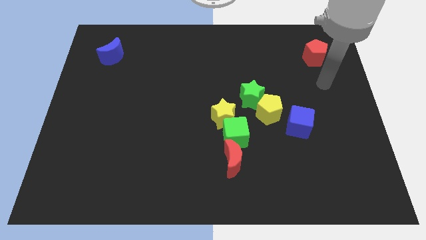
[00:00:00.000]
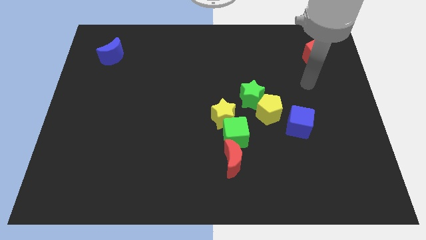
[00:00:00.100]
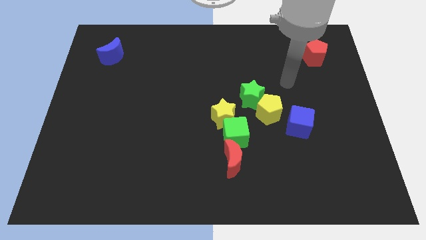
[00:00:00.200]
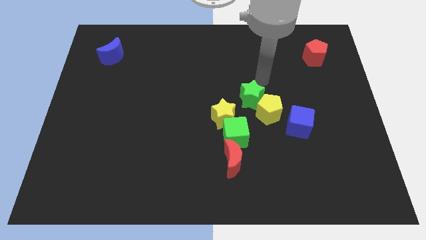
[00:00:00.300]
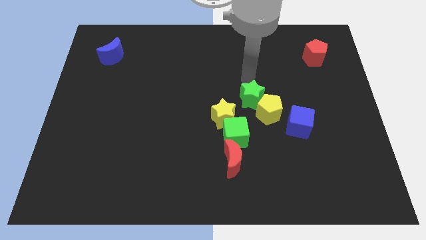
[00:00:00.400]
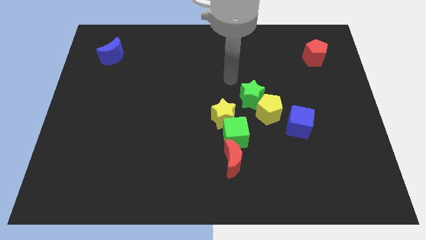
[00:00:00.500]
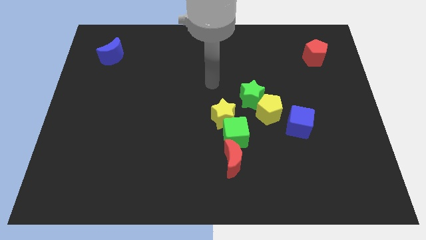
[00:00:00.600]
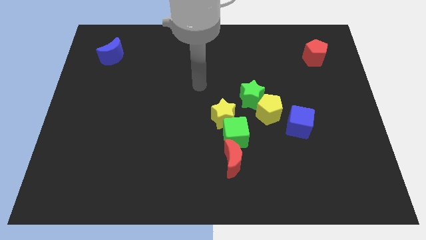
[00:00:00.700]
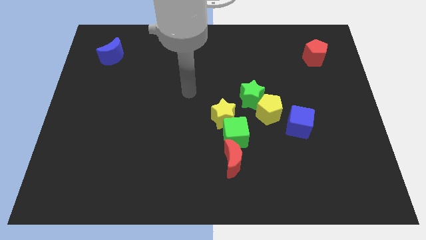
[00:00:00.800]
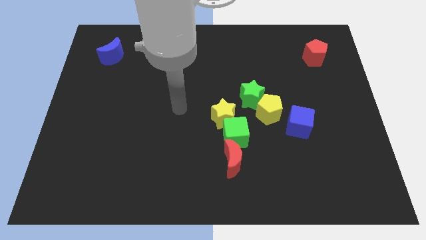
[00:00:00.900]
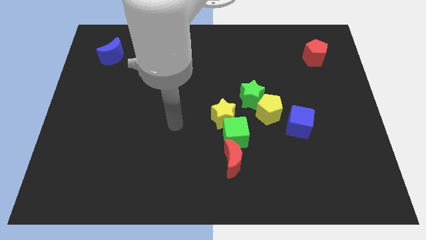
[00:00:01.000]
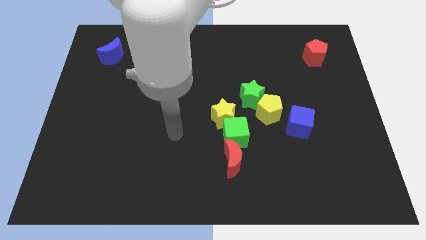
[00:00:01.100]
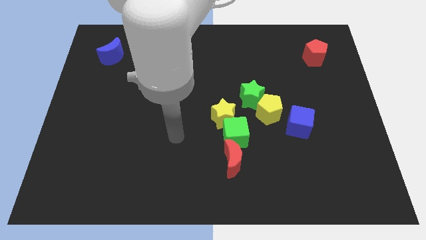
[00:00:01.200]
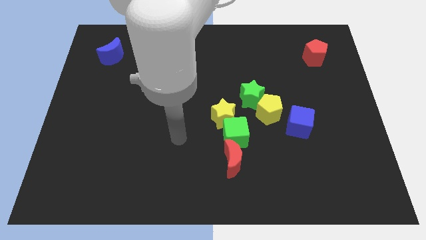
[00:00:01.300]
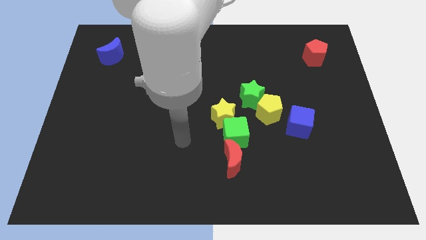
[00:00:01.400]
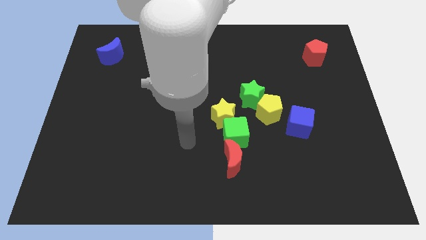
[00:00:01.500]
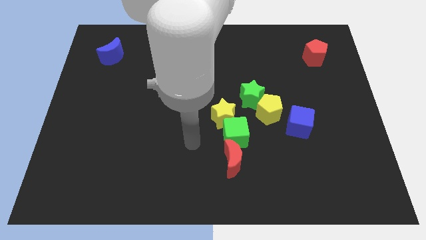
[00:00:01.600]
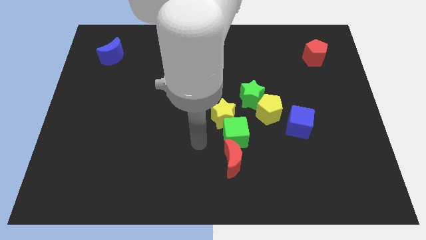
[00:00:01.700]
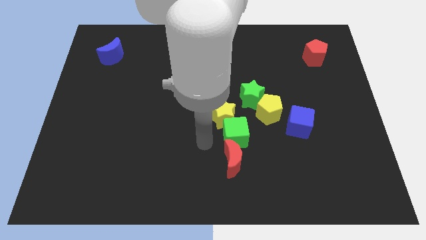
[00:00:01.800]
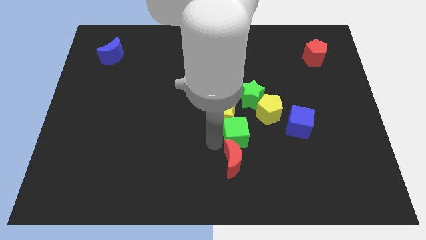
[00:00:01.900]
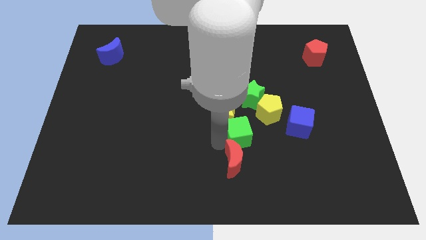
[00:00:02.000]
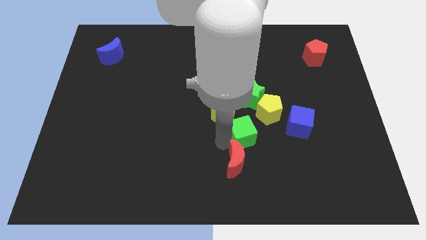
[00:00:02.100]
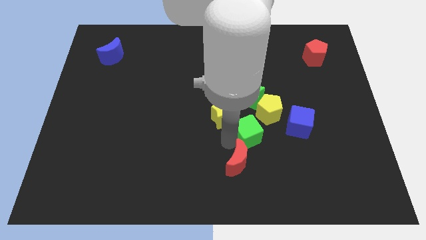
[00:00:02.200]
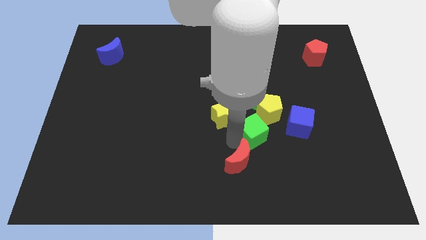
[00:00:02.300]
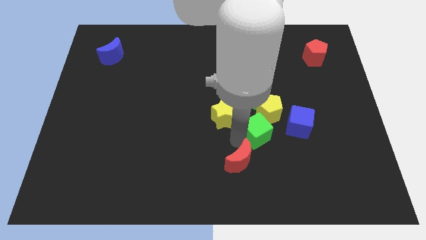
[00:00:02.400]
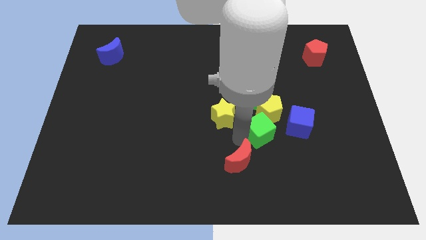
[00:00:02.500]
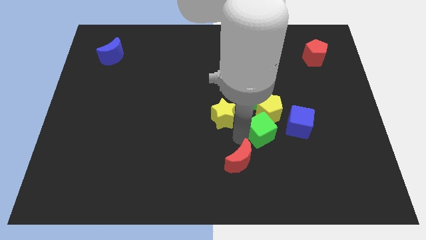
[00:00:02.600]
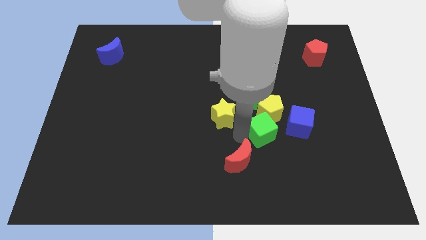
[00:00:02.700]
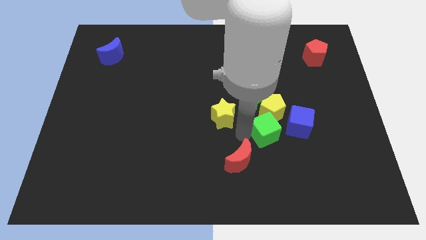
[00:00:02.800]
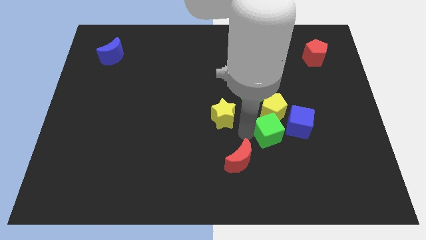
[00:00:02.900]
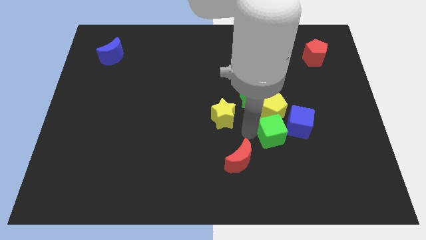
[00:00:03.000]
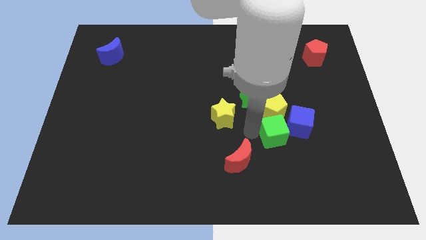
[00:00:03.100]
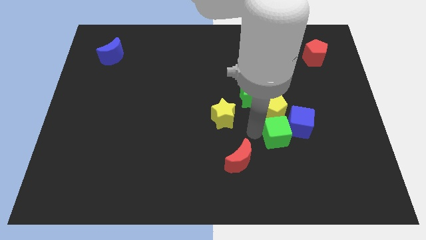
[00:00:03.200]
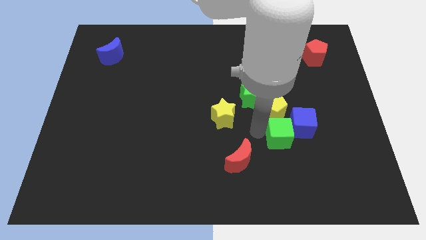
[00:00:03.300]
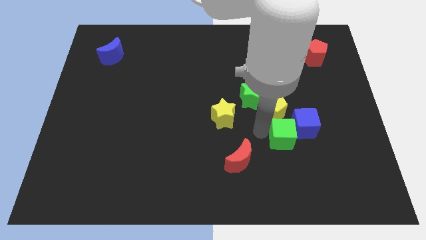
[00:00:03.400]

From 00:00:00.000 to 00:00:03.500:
put the green cube to the blue cube

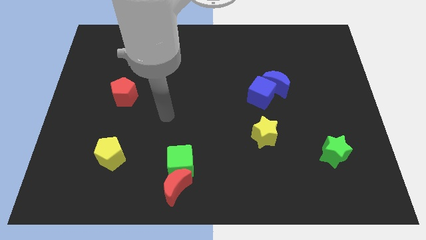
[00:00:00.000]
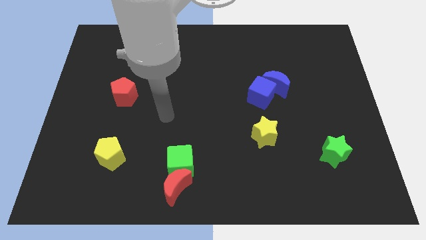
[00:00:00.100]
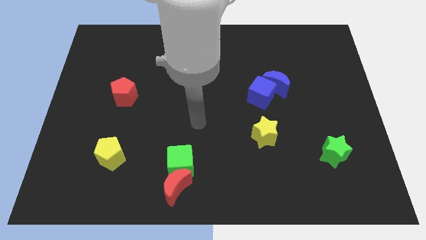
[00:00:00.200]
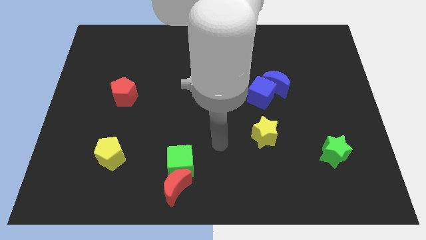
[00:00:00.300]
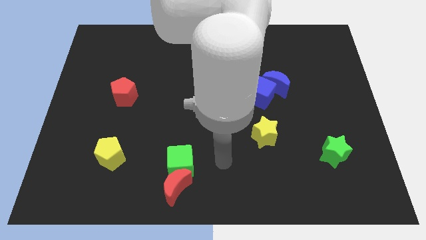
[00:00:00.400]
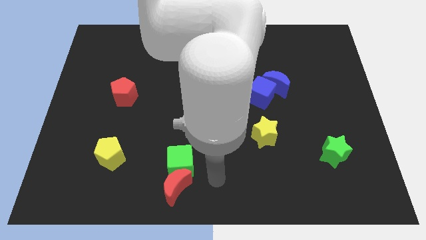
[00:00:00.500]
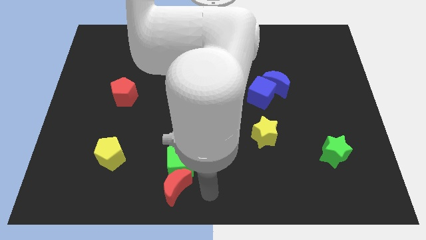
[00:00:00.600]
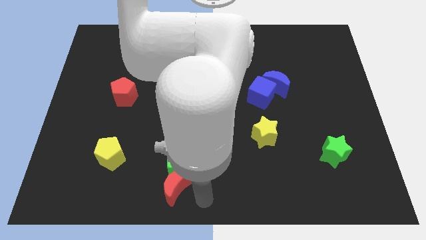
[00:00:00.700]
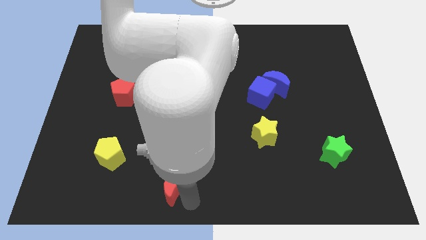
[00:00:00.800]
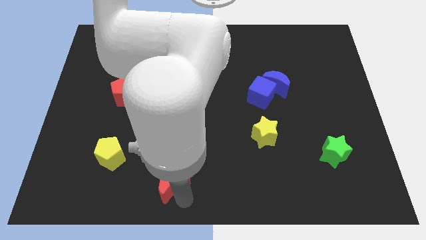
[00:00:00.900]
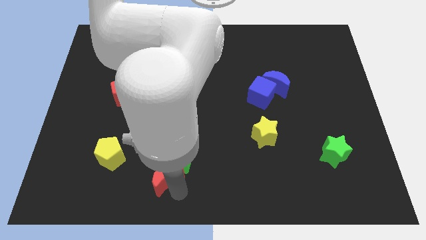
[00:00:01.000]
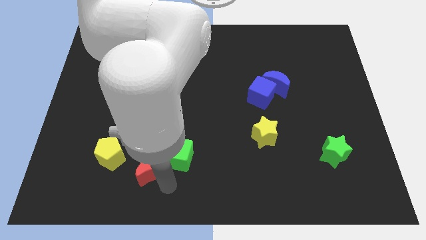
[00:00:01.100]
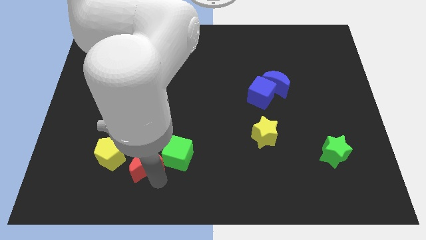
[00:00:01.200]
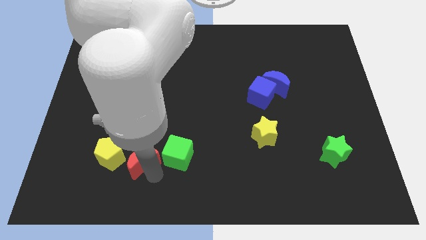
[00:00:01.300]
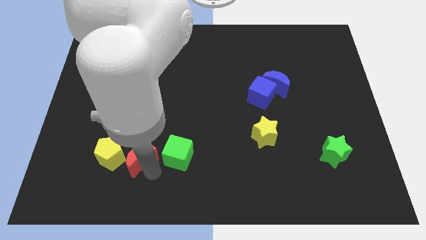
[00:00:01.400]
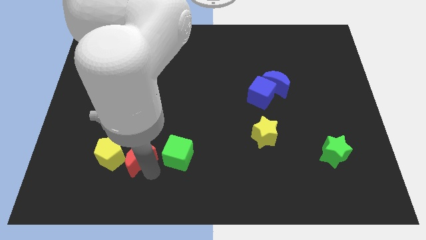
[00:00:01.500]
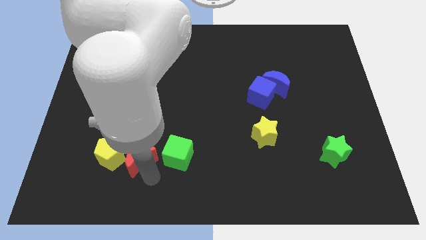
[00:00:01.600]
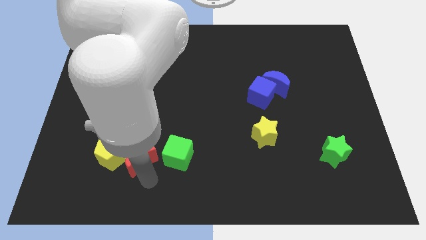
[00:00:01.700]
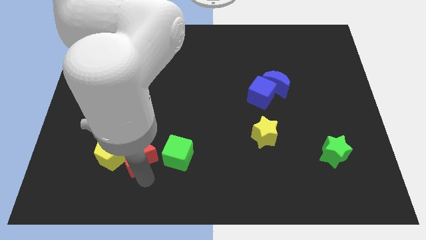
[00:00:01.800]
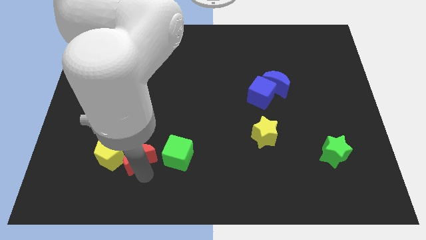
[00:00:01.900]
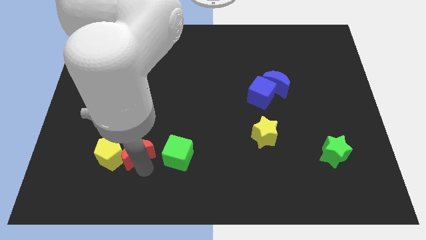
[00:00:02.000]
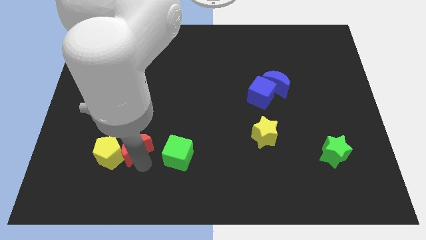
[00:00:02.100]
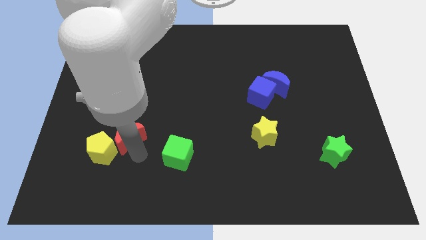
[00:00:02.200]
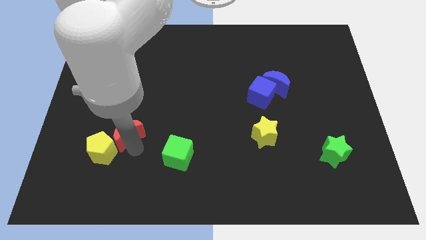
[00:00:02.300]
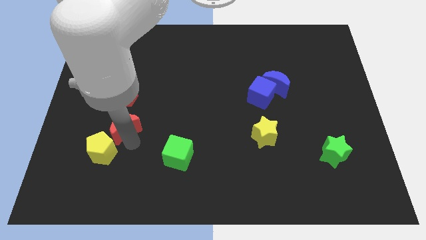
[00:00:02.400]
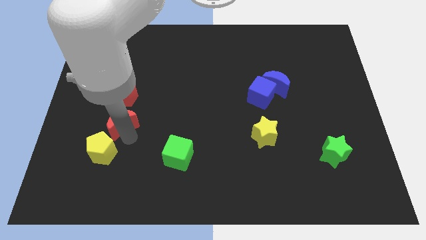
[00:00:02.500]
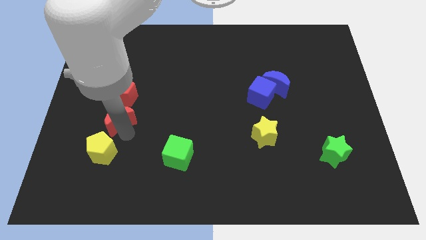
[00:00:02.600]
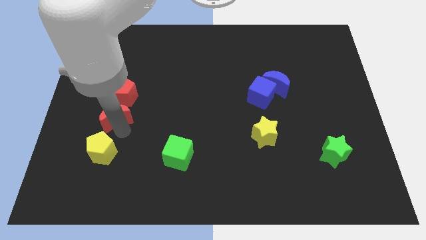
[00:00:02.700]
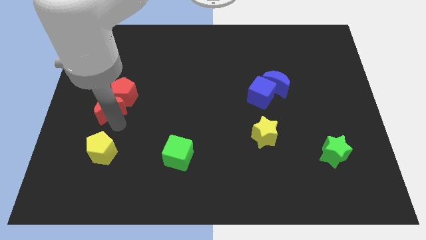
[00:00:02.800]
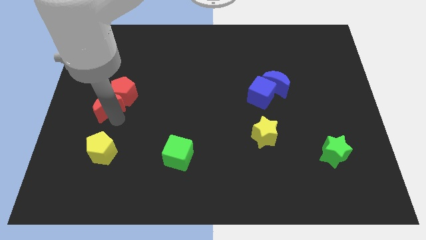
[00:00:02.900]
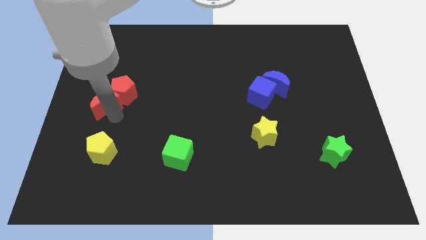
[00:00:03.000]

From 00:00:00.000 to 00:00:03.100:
put the red moon to the red pentagon

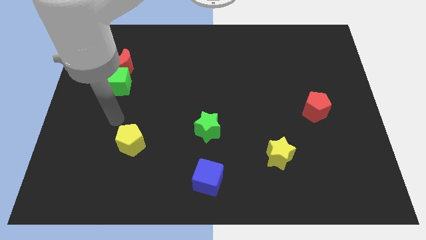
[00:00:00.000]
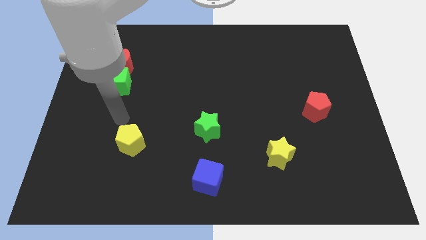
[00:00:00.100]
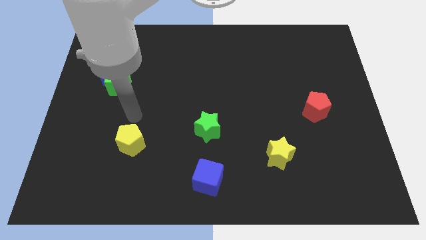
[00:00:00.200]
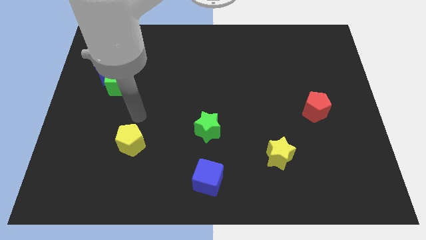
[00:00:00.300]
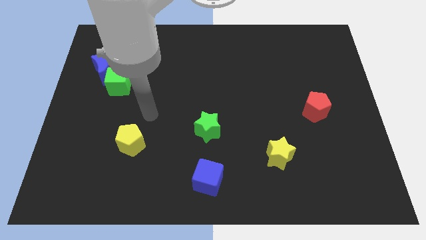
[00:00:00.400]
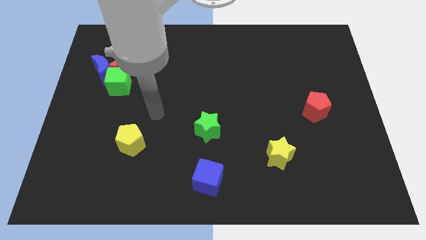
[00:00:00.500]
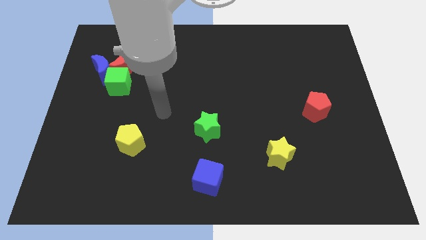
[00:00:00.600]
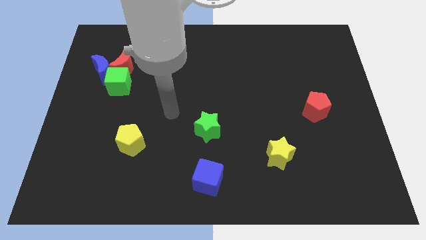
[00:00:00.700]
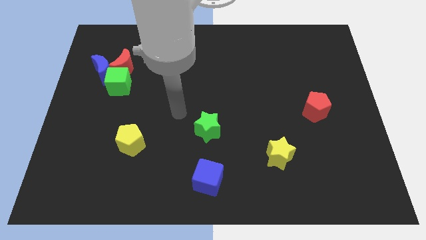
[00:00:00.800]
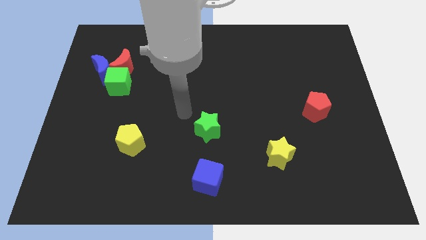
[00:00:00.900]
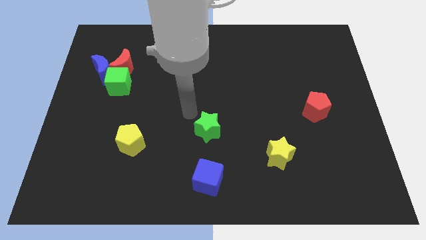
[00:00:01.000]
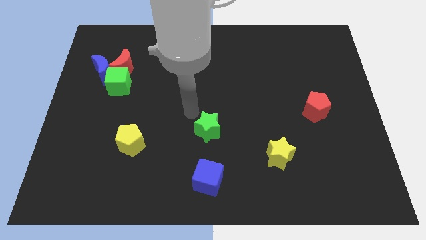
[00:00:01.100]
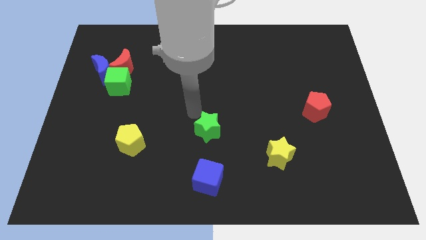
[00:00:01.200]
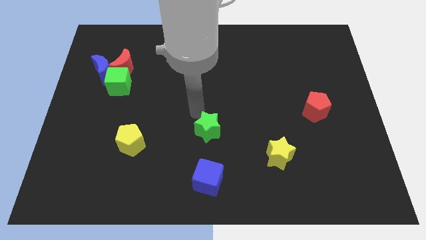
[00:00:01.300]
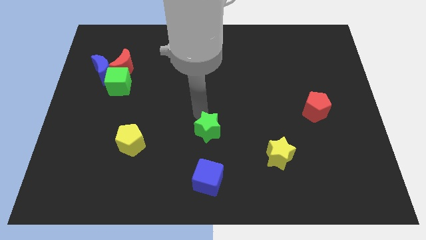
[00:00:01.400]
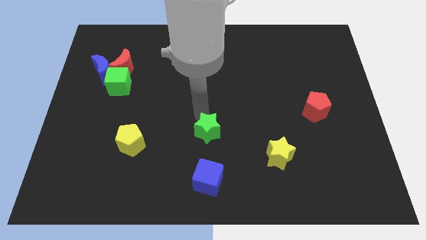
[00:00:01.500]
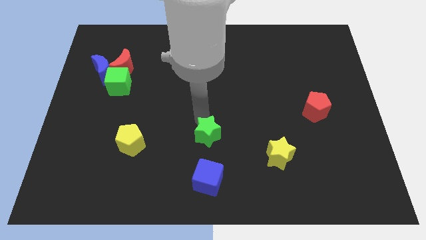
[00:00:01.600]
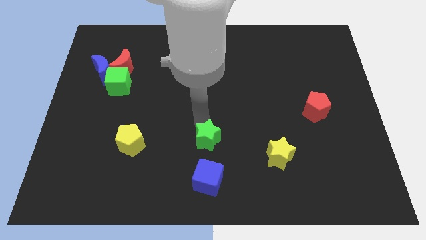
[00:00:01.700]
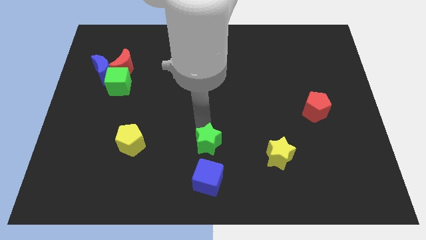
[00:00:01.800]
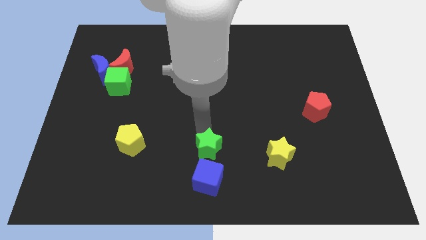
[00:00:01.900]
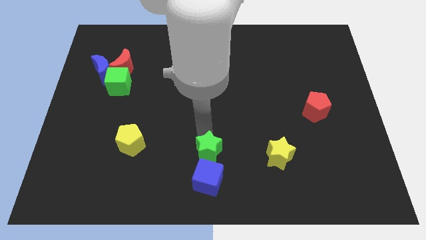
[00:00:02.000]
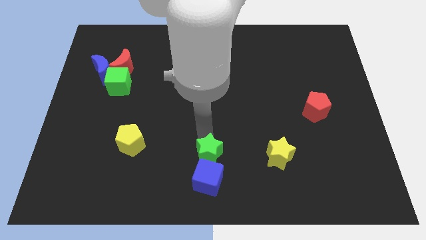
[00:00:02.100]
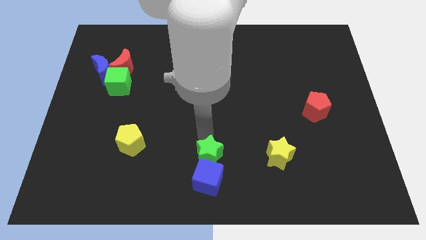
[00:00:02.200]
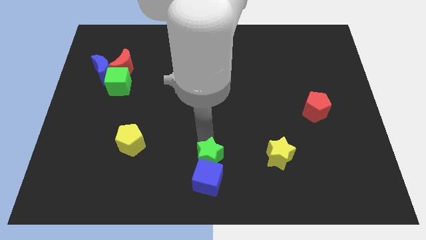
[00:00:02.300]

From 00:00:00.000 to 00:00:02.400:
slide the green star next to the blue cube
